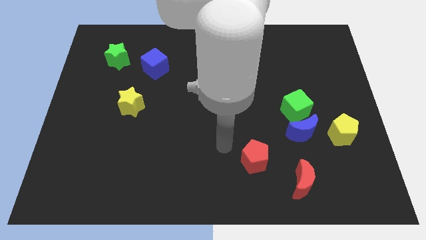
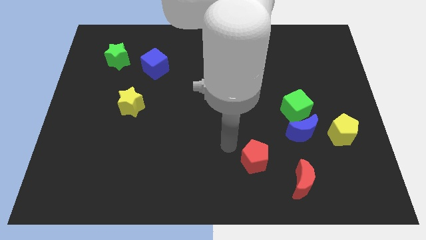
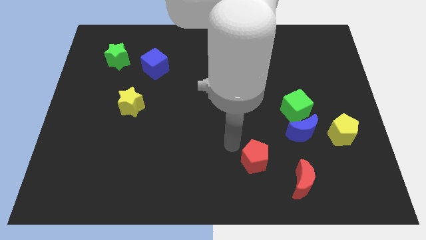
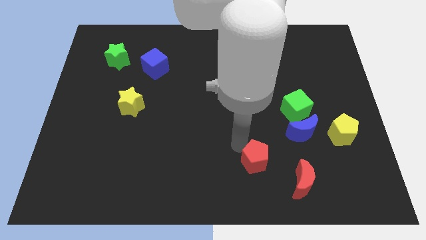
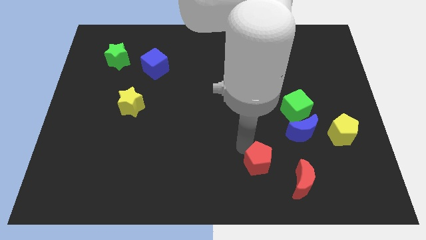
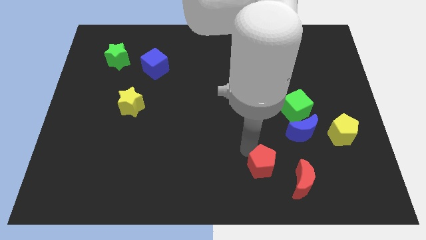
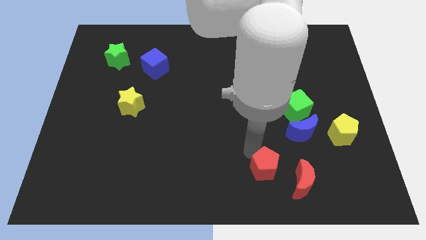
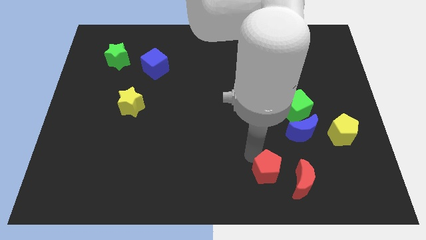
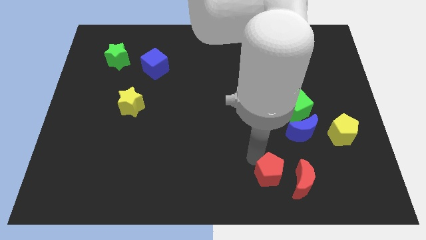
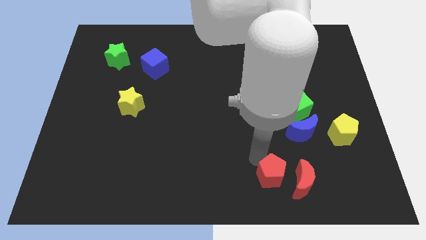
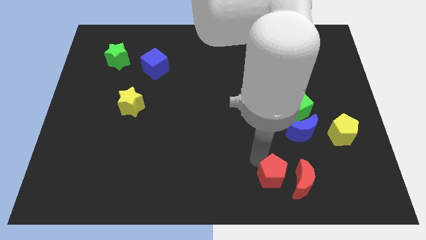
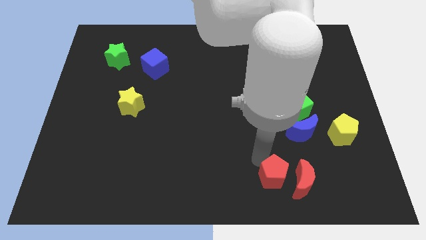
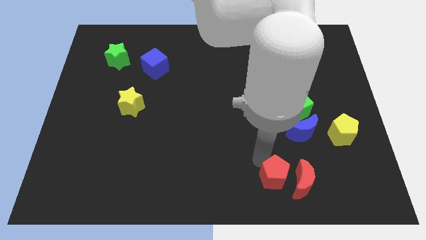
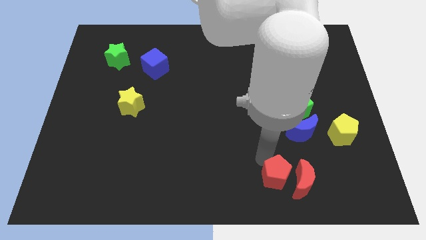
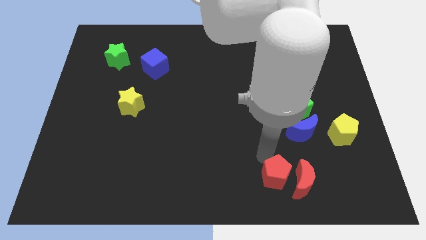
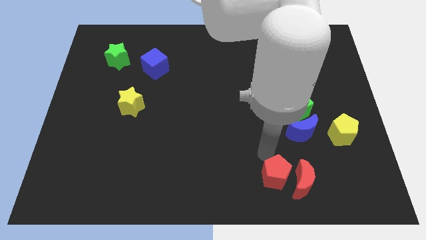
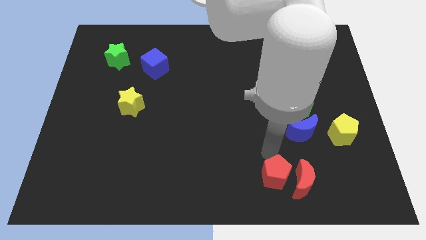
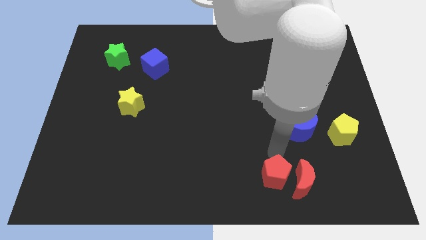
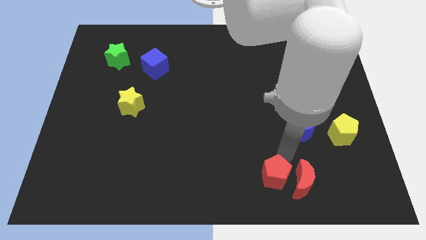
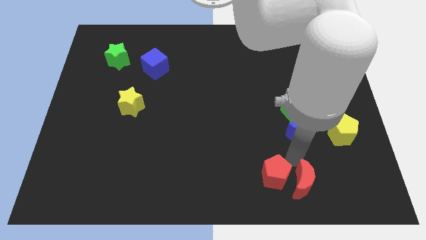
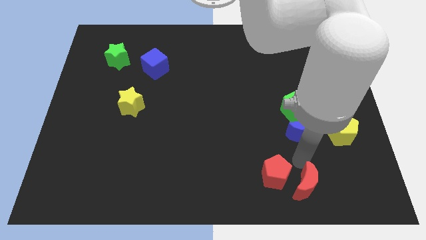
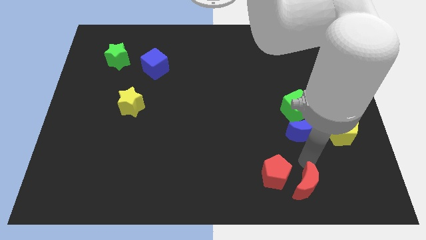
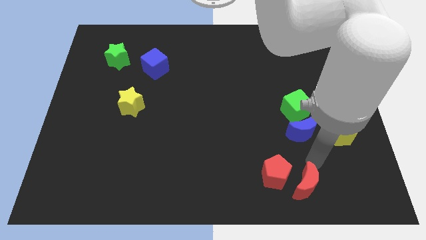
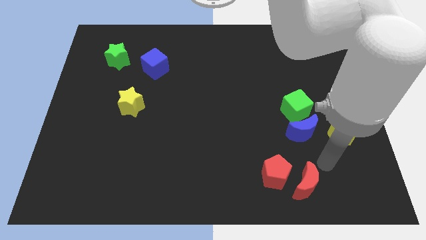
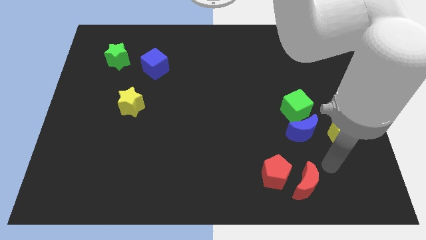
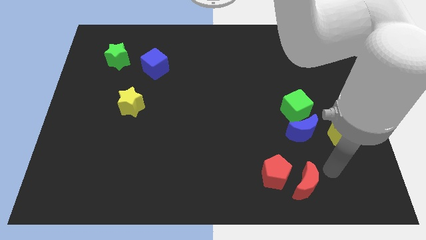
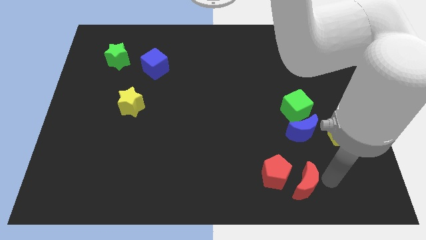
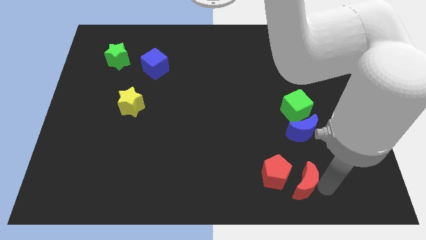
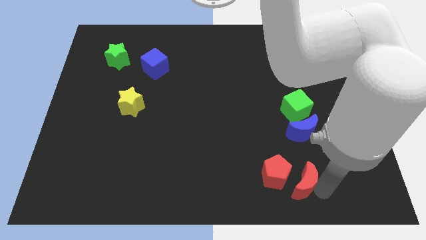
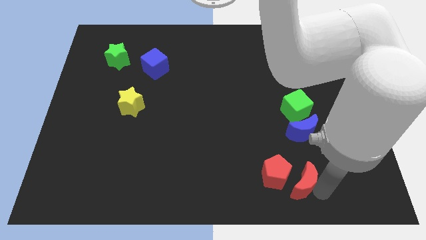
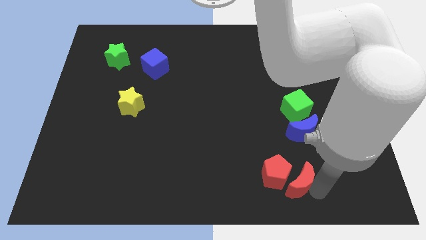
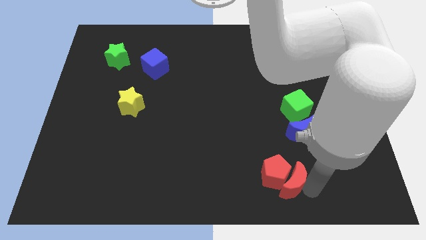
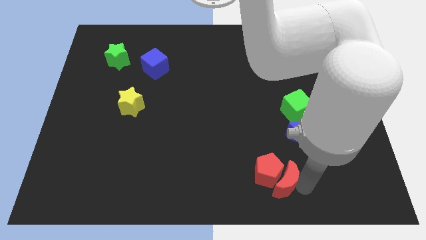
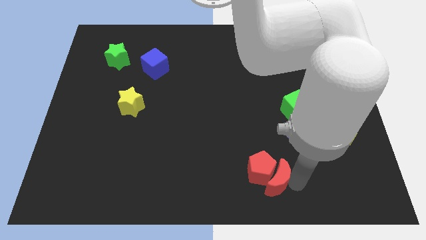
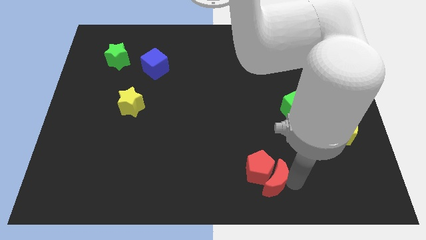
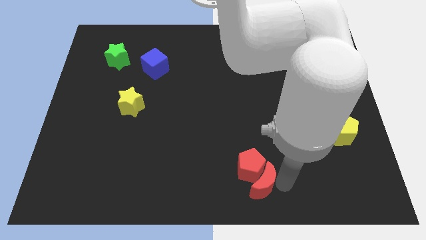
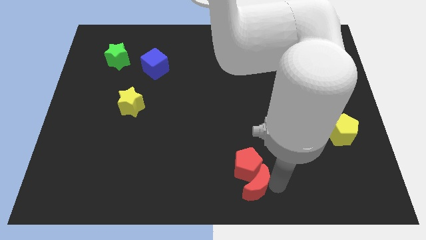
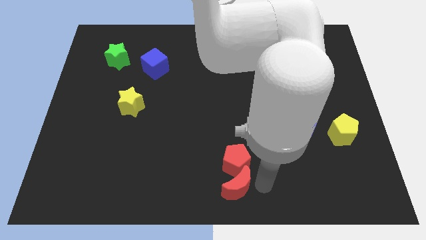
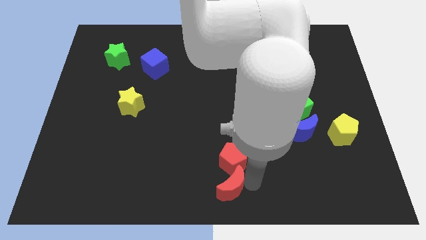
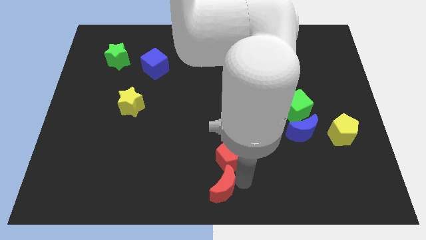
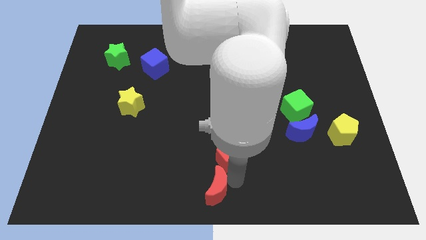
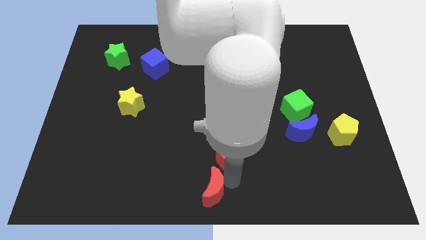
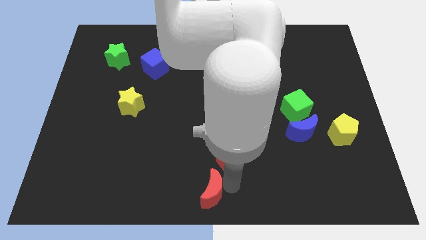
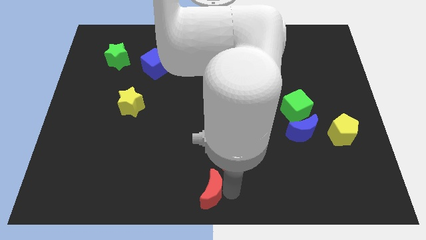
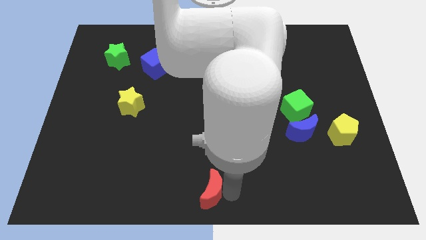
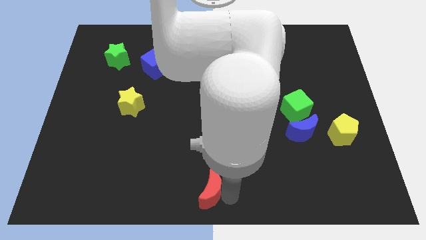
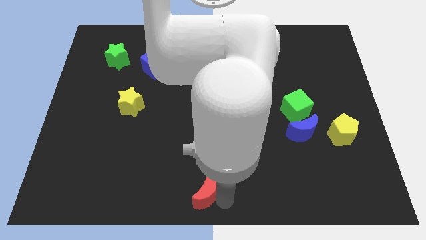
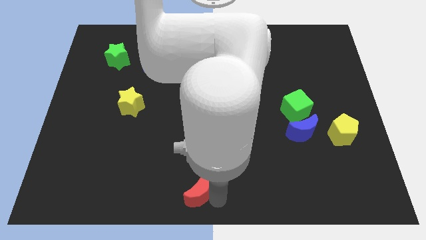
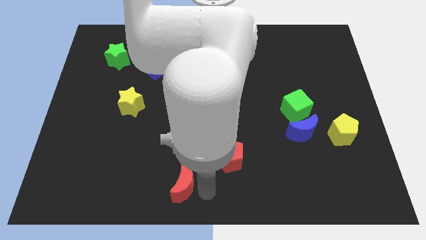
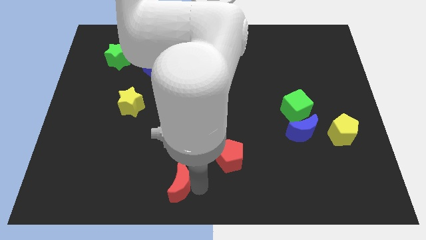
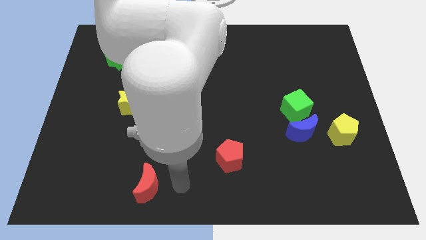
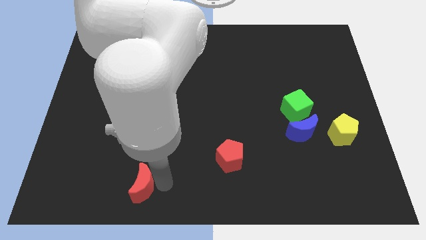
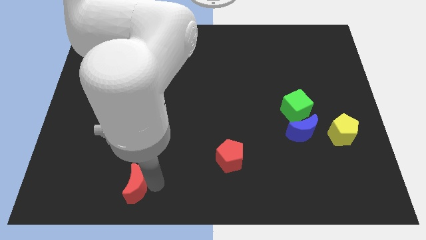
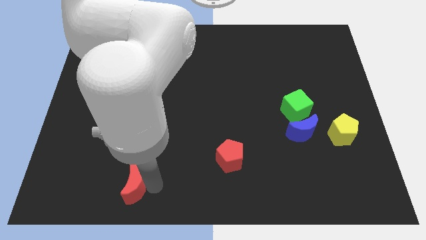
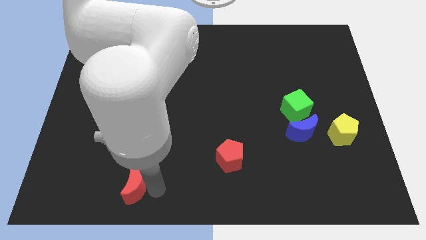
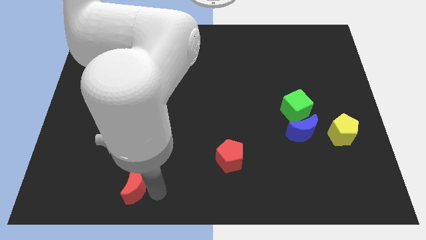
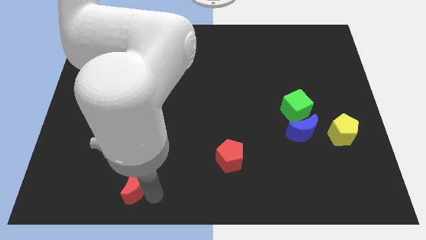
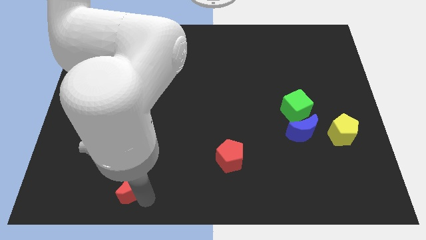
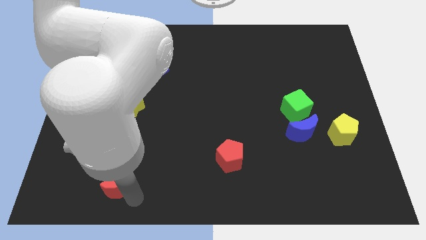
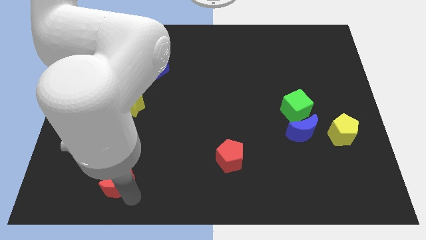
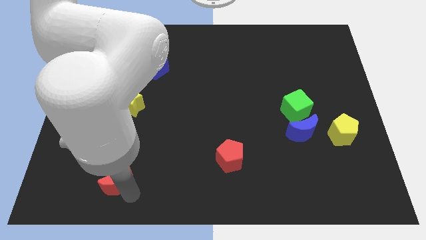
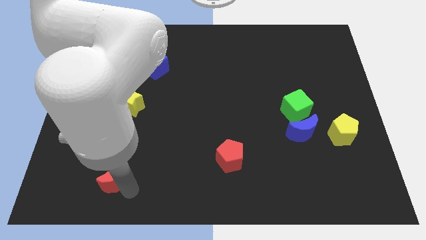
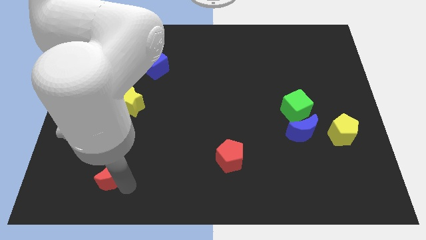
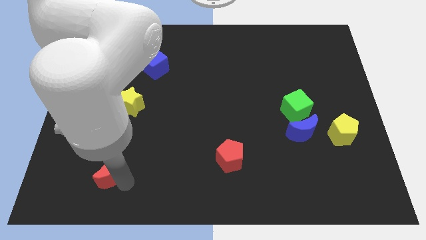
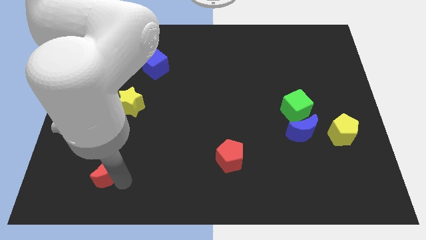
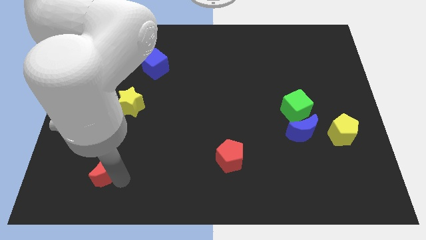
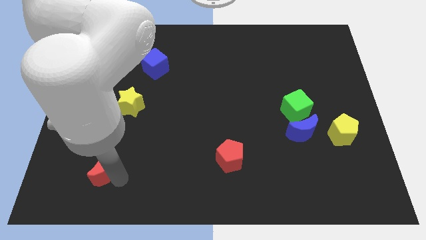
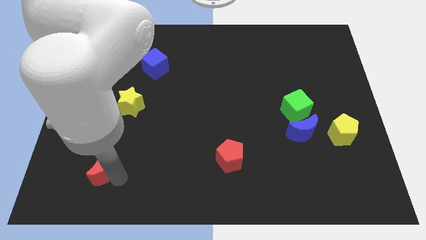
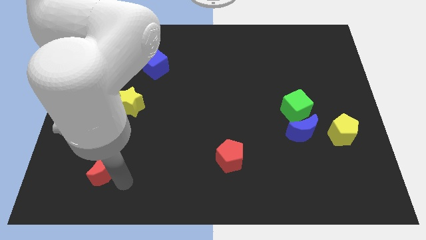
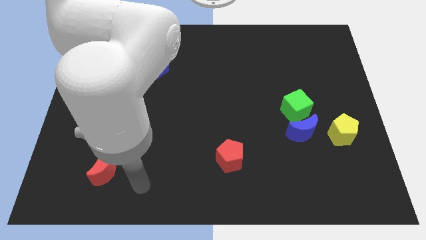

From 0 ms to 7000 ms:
move the red crescent to the left bottom

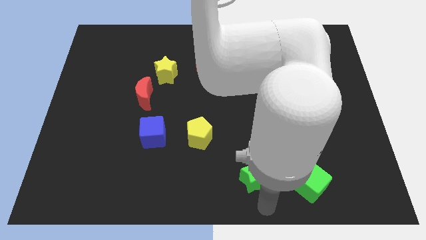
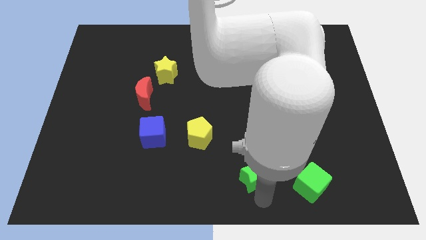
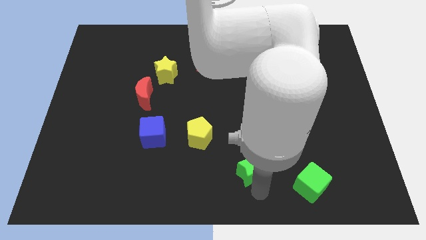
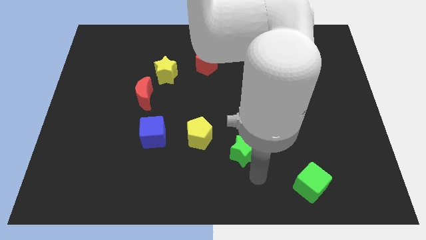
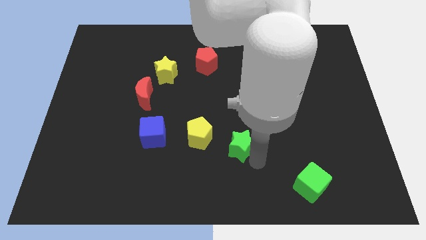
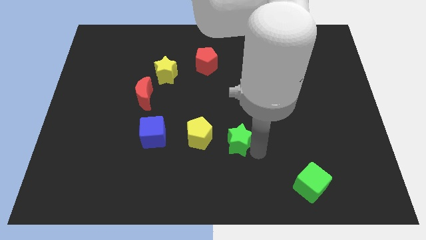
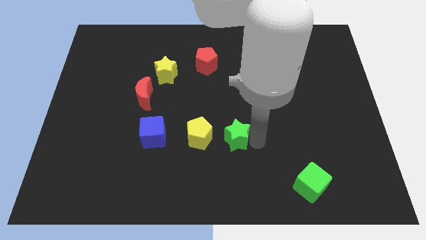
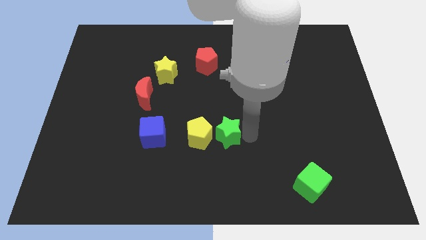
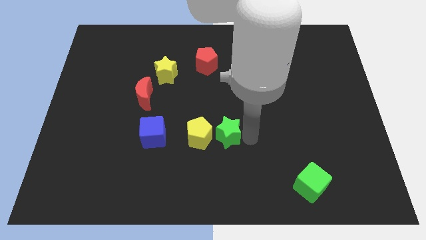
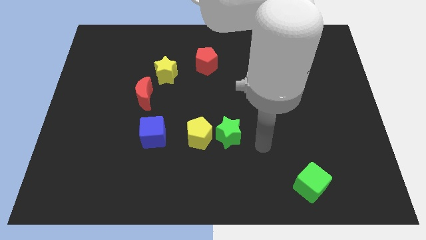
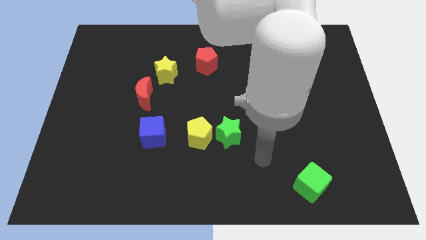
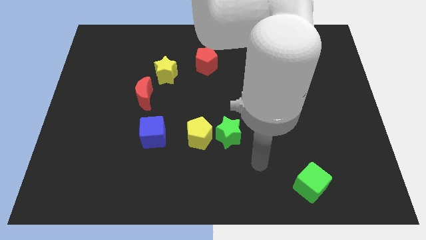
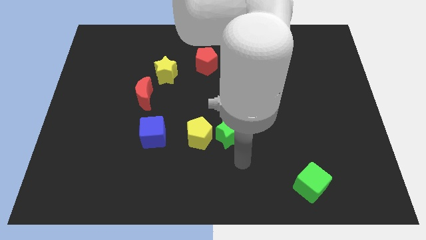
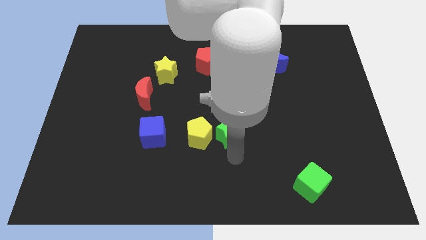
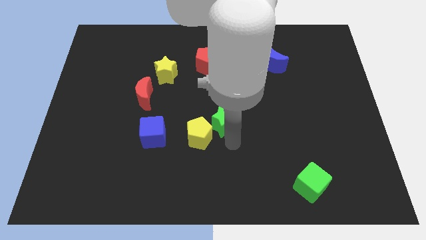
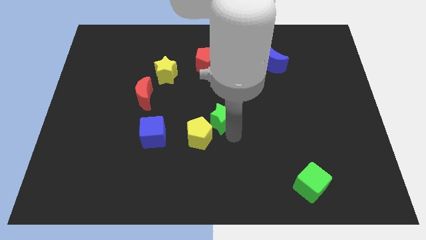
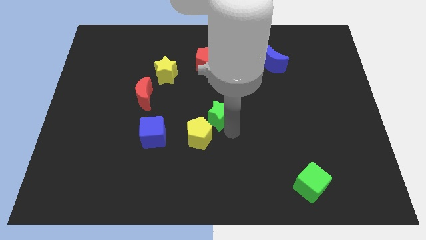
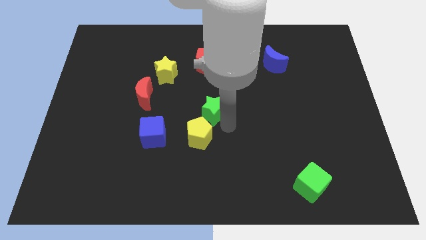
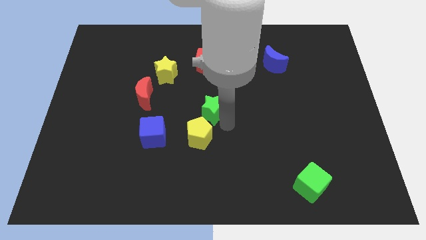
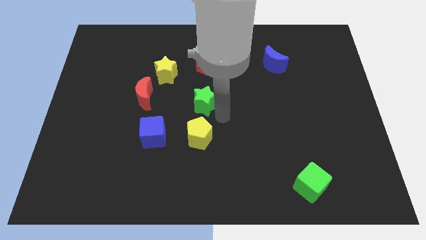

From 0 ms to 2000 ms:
push the green star towards the red pentagon
